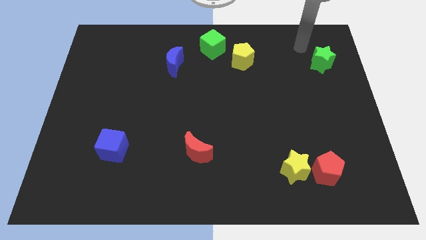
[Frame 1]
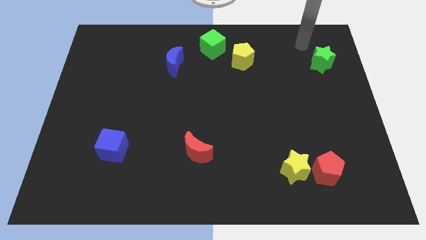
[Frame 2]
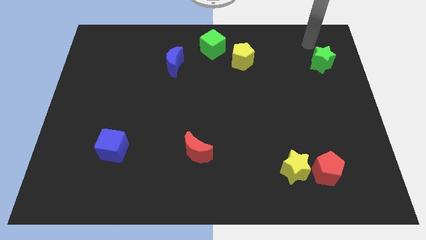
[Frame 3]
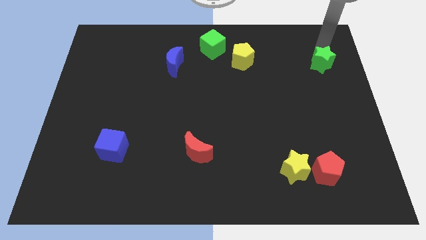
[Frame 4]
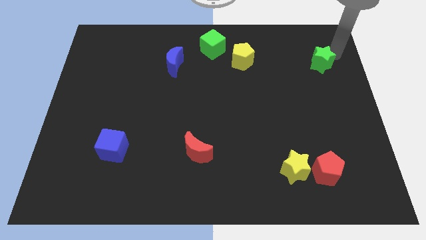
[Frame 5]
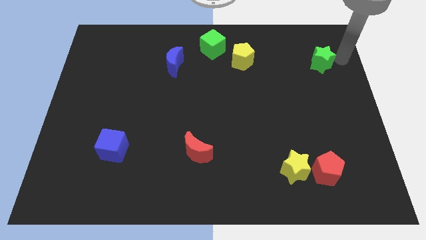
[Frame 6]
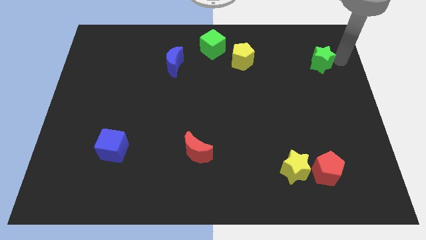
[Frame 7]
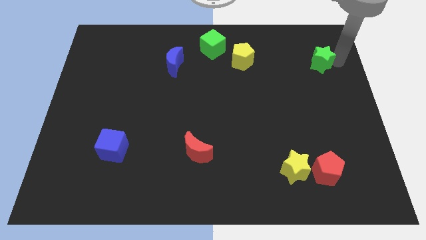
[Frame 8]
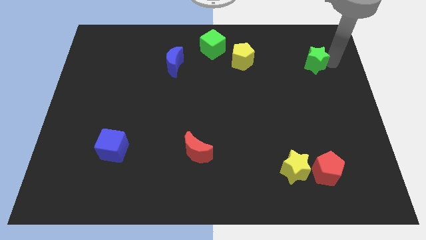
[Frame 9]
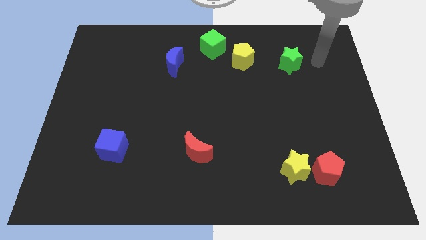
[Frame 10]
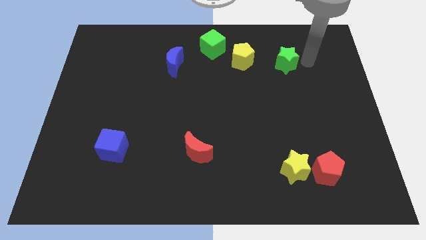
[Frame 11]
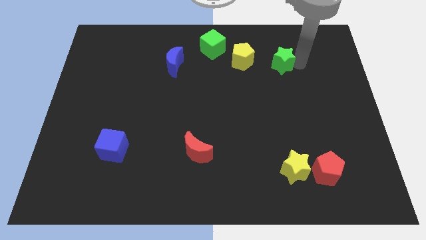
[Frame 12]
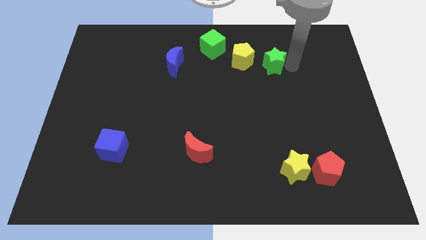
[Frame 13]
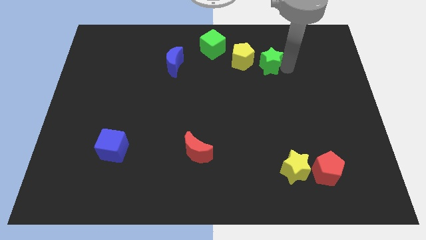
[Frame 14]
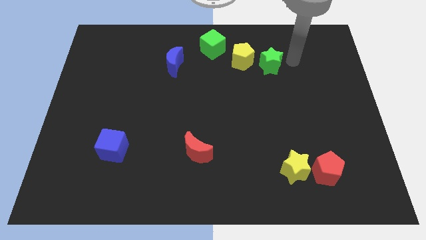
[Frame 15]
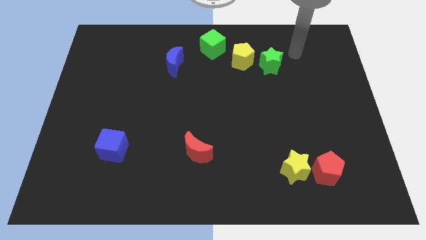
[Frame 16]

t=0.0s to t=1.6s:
push the green star towards yellow pentagon

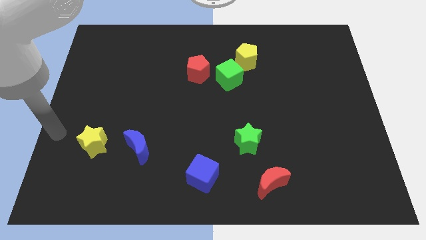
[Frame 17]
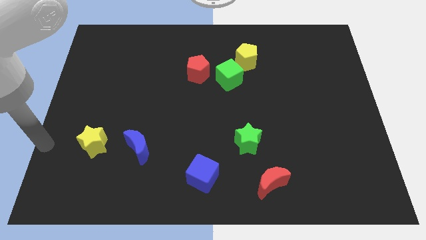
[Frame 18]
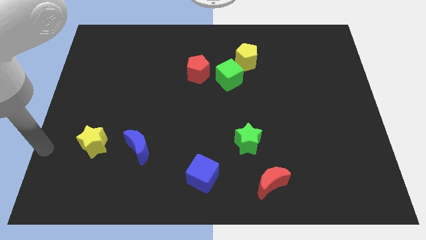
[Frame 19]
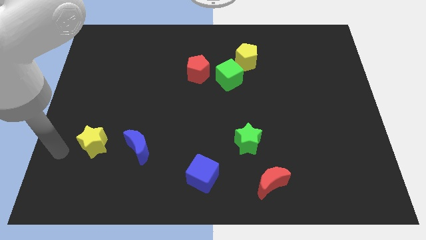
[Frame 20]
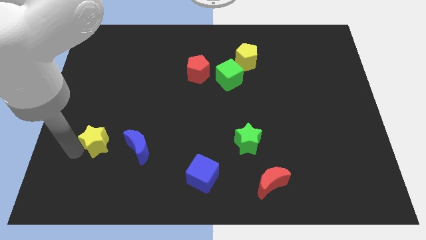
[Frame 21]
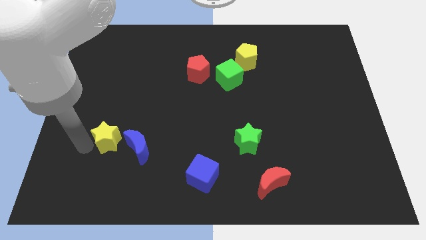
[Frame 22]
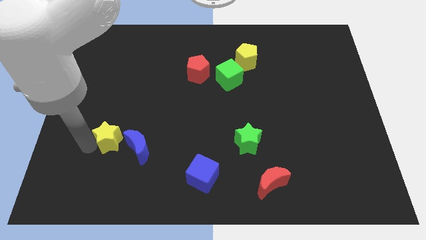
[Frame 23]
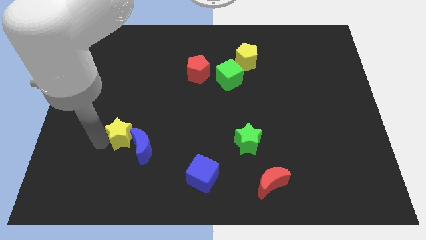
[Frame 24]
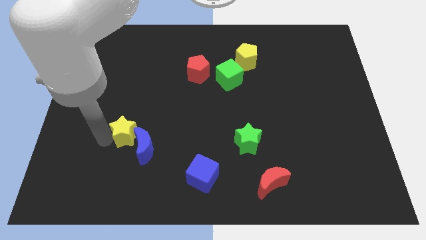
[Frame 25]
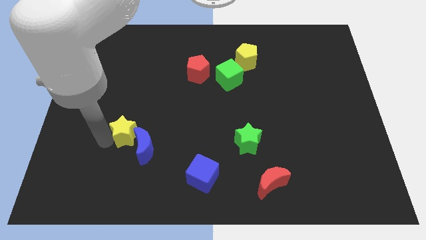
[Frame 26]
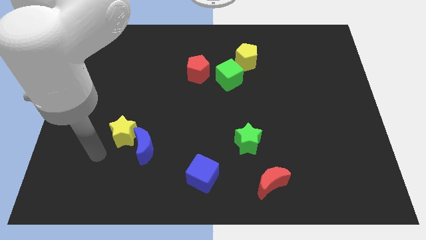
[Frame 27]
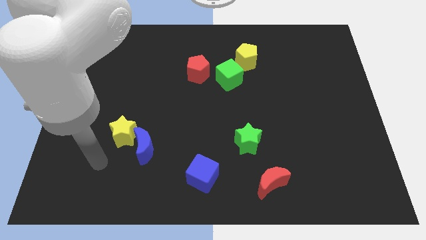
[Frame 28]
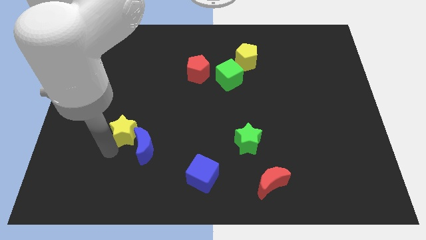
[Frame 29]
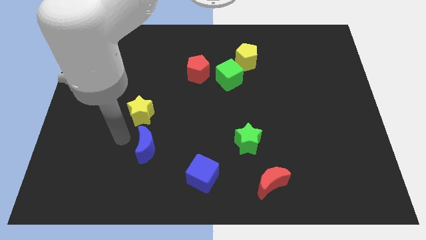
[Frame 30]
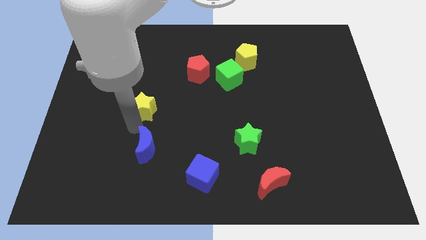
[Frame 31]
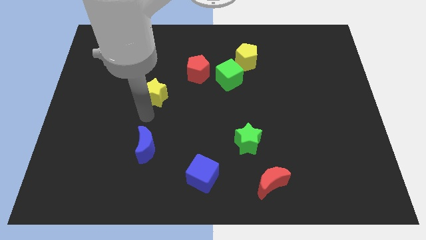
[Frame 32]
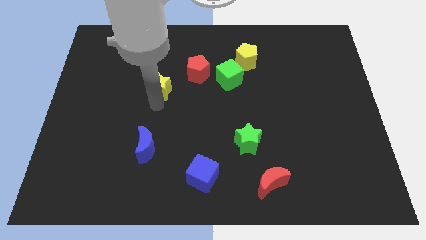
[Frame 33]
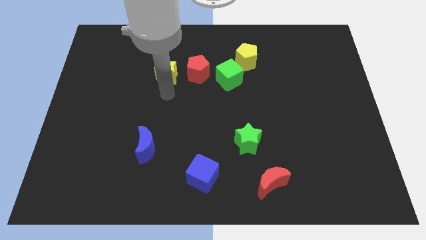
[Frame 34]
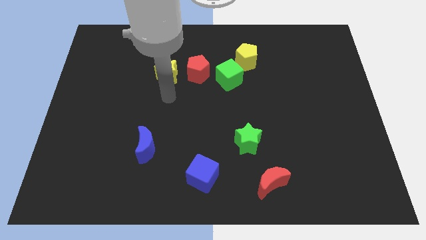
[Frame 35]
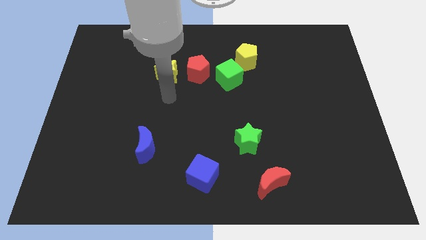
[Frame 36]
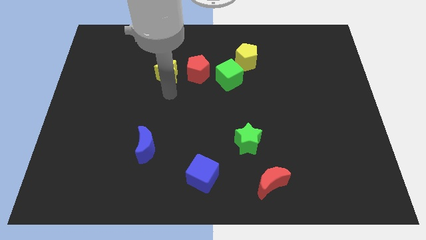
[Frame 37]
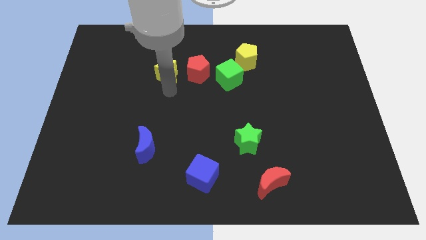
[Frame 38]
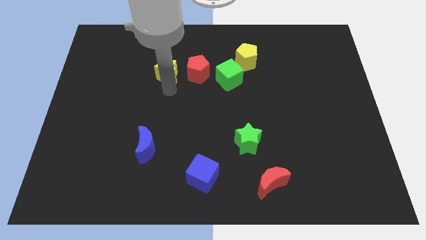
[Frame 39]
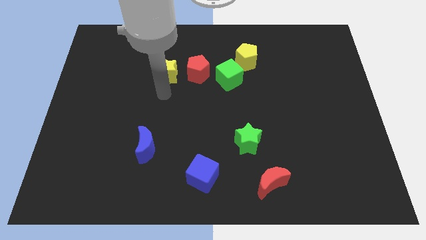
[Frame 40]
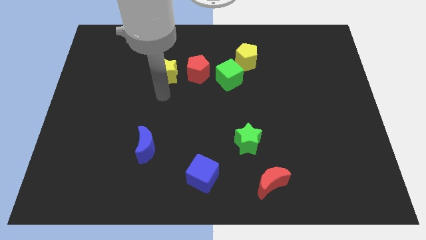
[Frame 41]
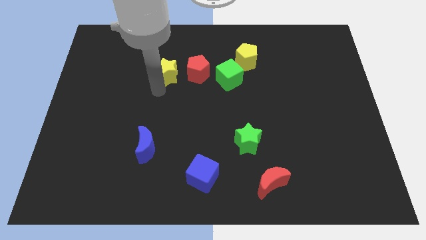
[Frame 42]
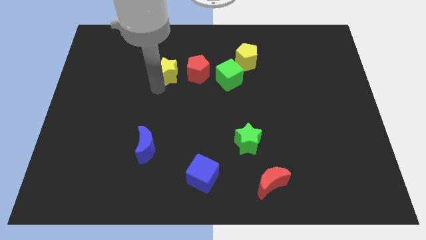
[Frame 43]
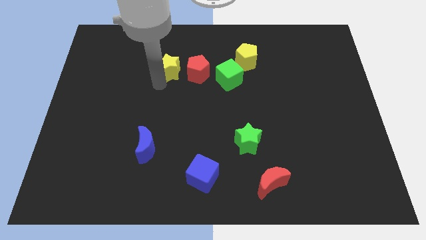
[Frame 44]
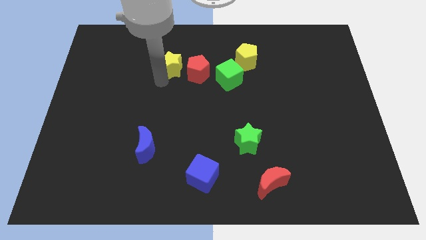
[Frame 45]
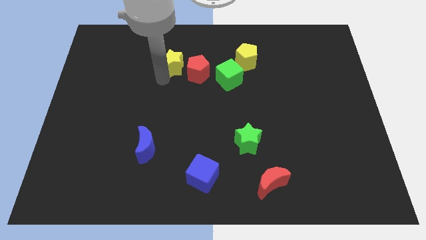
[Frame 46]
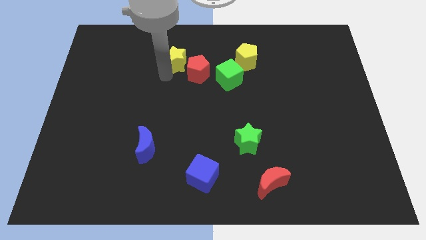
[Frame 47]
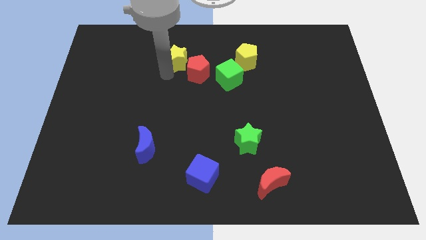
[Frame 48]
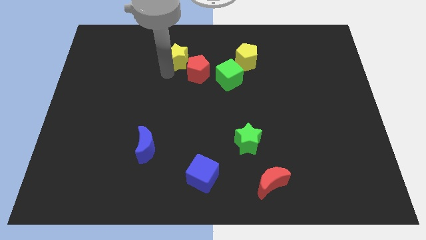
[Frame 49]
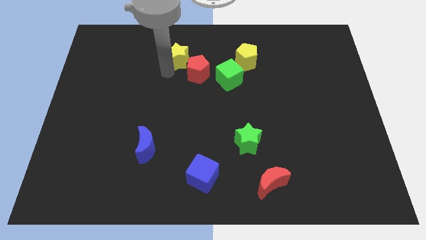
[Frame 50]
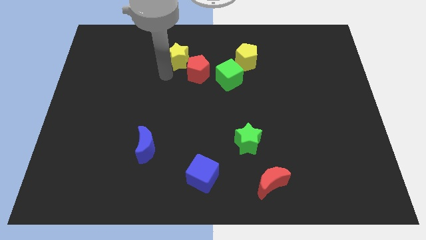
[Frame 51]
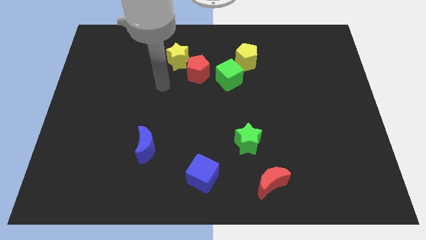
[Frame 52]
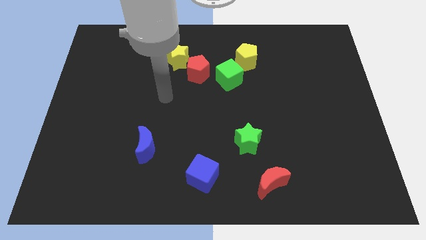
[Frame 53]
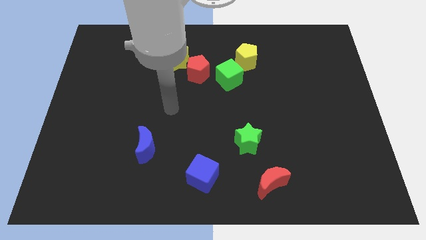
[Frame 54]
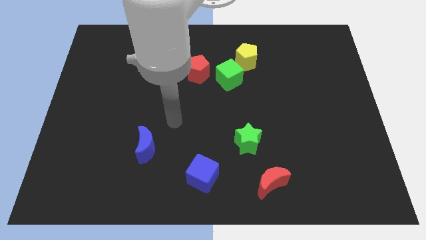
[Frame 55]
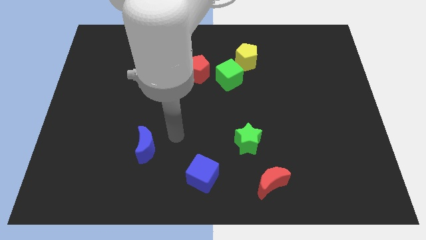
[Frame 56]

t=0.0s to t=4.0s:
push the yellow star to the left of the red pentagon

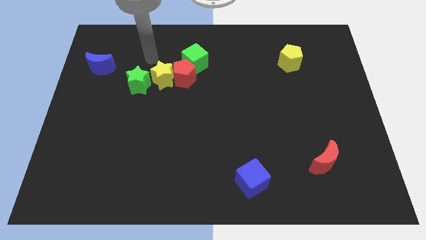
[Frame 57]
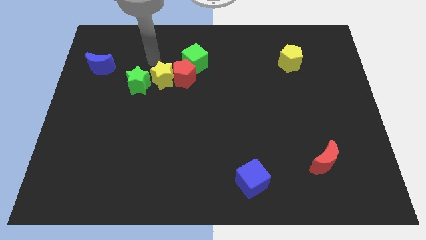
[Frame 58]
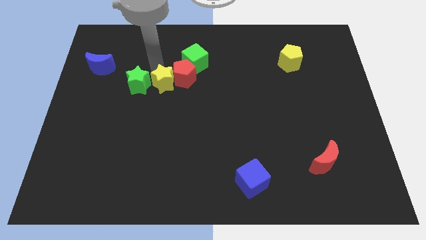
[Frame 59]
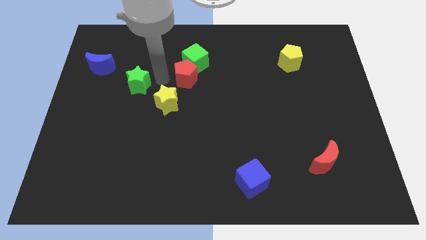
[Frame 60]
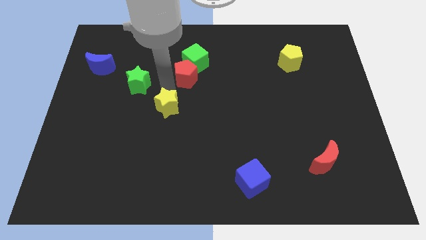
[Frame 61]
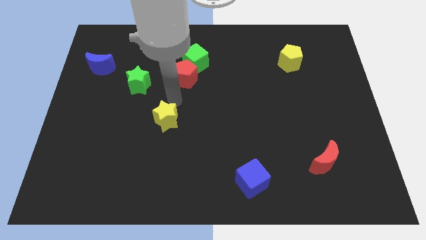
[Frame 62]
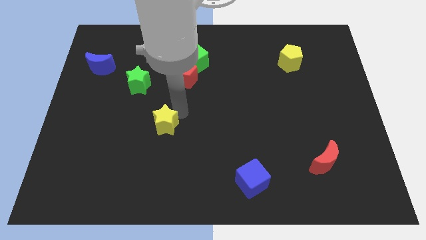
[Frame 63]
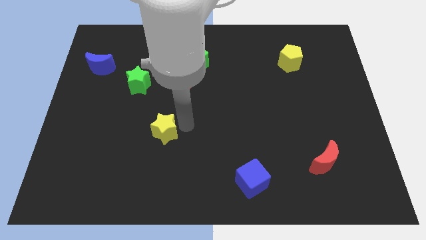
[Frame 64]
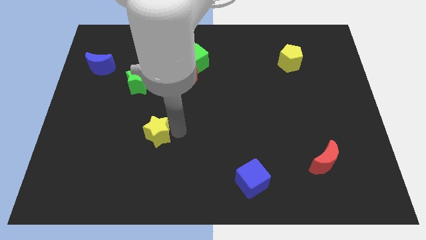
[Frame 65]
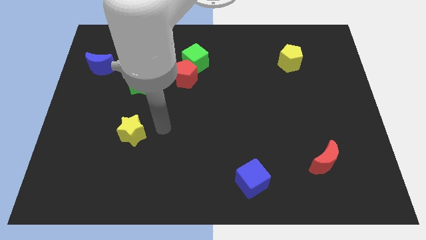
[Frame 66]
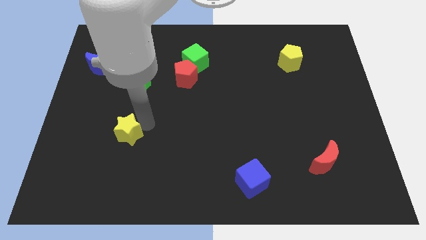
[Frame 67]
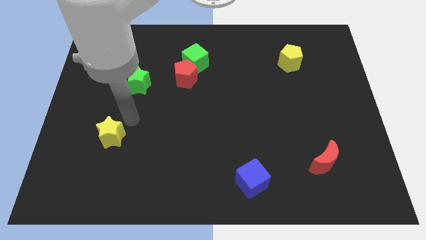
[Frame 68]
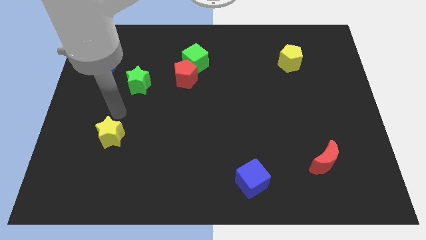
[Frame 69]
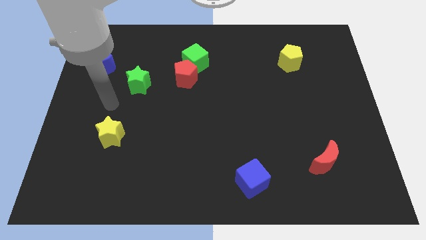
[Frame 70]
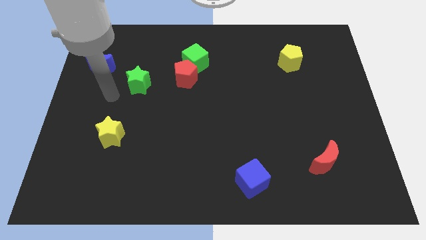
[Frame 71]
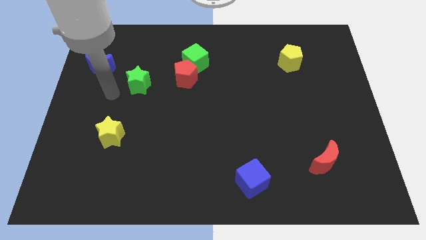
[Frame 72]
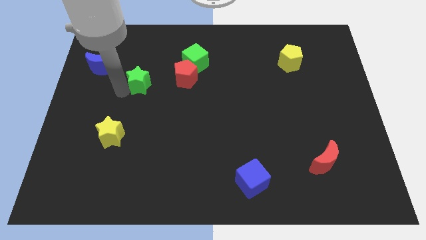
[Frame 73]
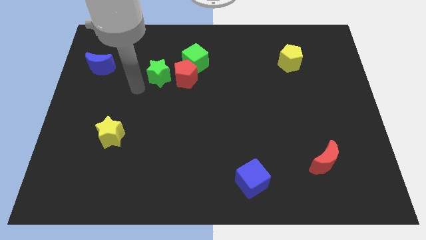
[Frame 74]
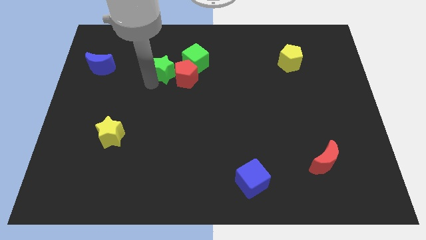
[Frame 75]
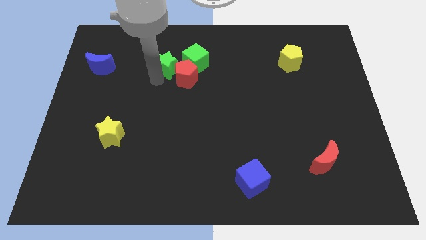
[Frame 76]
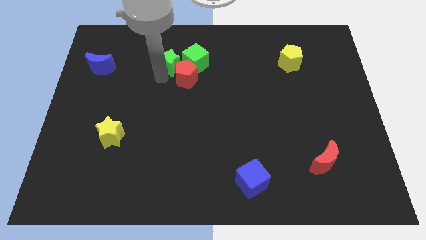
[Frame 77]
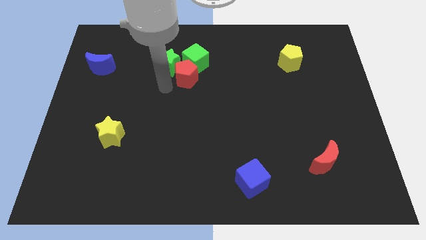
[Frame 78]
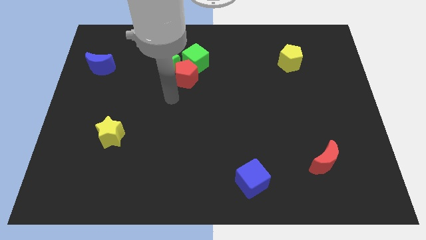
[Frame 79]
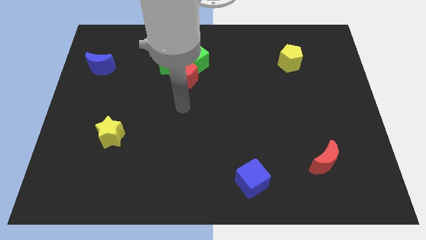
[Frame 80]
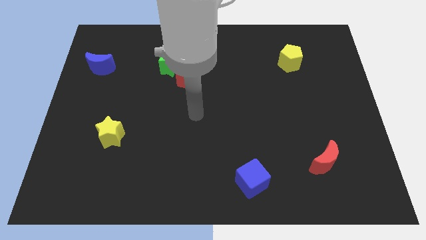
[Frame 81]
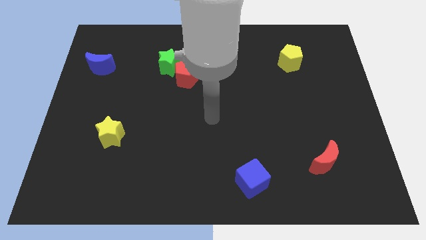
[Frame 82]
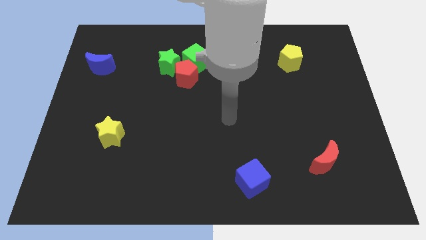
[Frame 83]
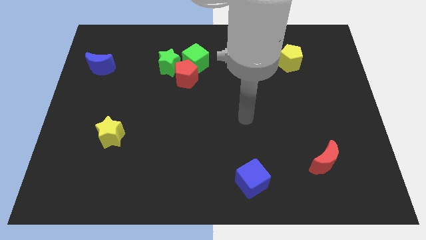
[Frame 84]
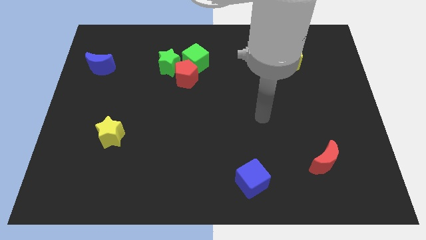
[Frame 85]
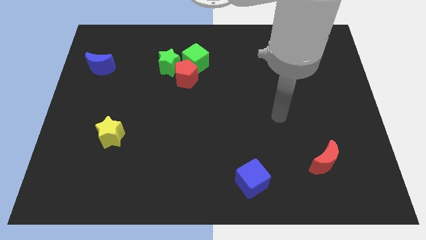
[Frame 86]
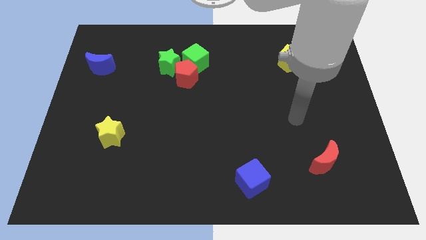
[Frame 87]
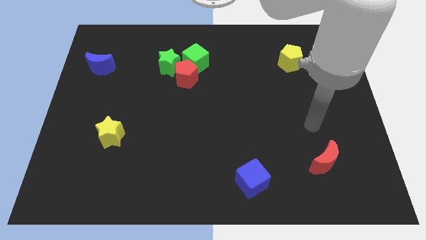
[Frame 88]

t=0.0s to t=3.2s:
push the green star into green cube
